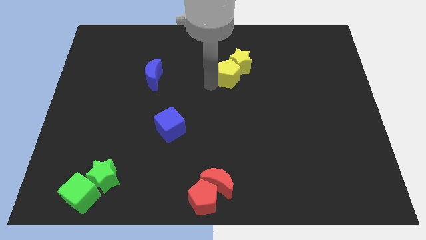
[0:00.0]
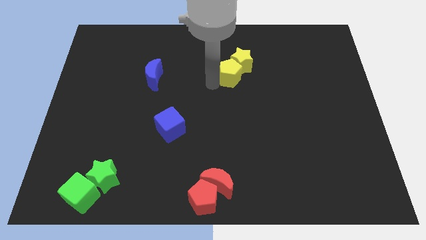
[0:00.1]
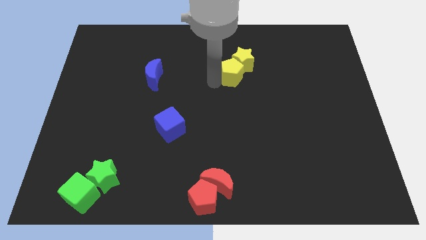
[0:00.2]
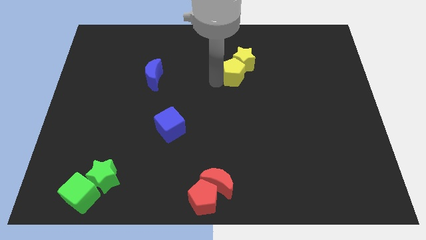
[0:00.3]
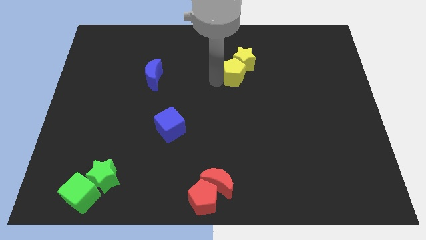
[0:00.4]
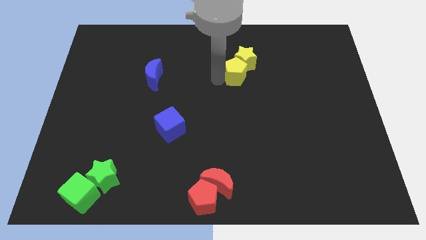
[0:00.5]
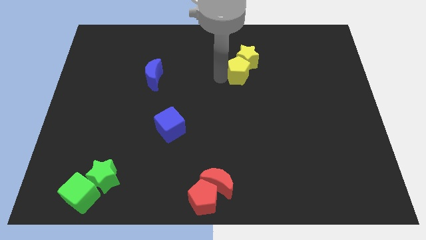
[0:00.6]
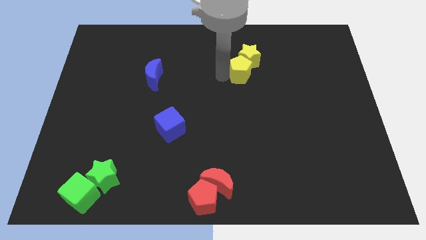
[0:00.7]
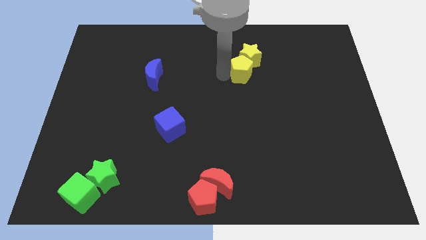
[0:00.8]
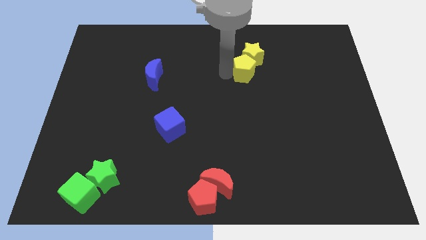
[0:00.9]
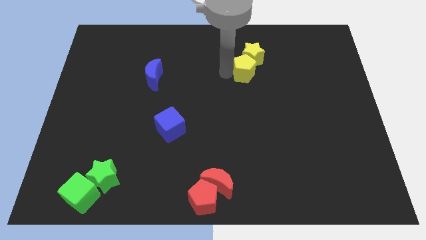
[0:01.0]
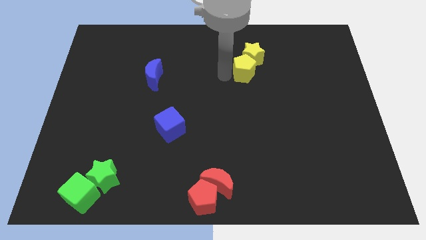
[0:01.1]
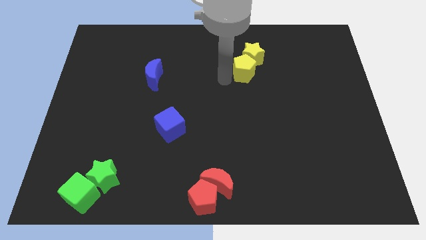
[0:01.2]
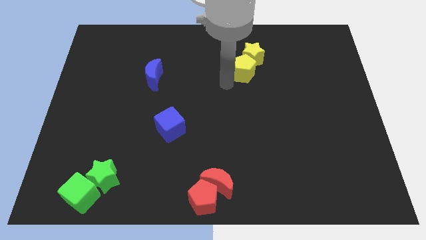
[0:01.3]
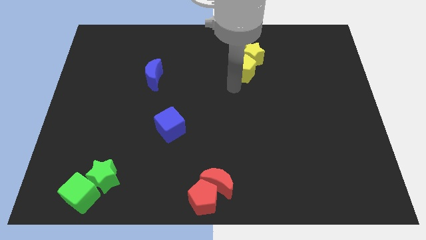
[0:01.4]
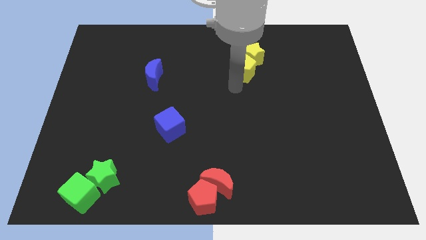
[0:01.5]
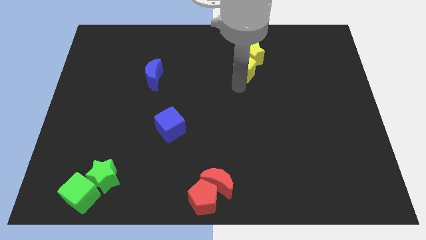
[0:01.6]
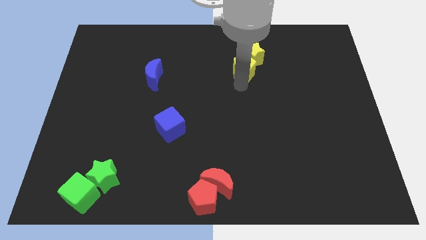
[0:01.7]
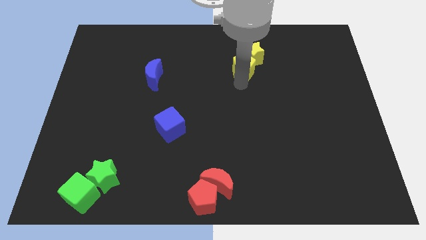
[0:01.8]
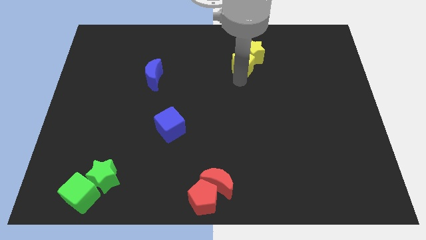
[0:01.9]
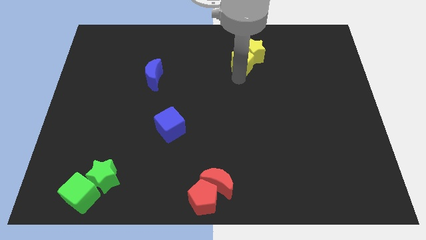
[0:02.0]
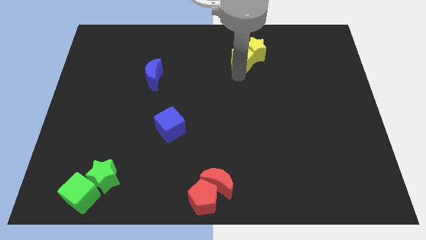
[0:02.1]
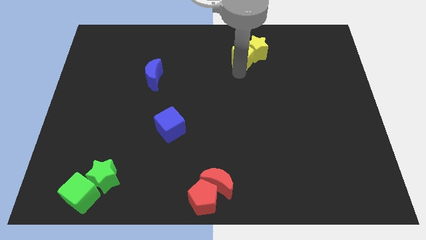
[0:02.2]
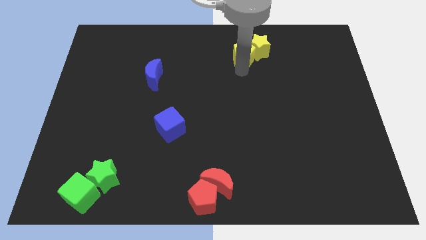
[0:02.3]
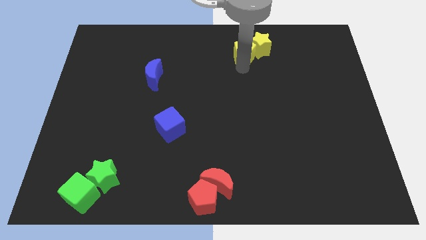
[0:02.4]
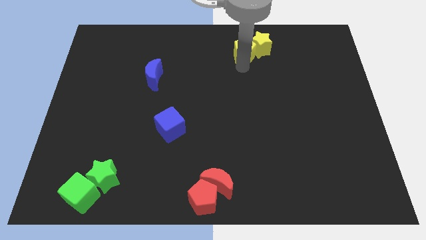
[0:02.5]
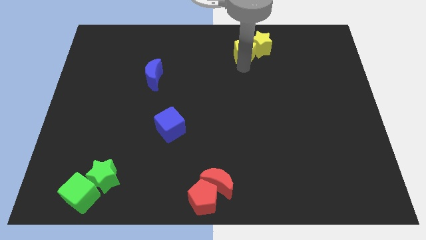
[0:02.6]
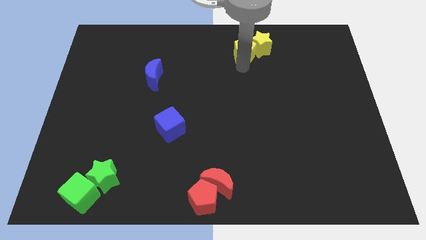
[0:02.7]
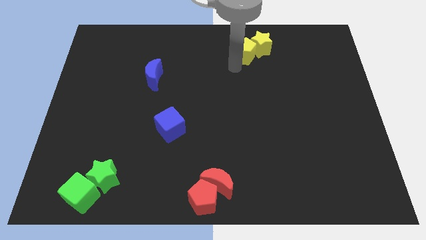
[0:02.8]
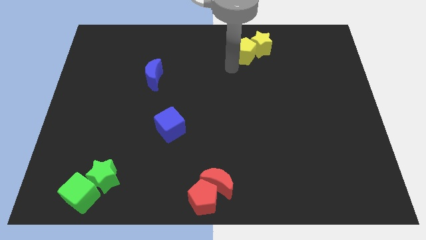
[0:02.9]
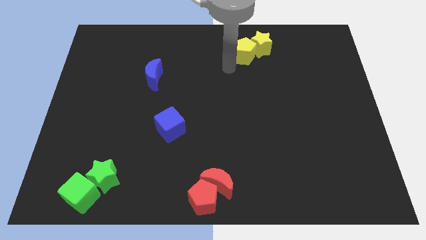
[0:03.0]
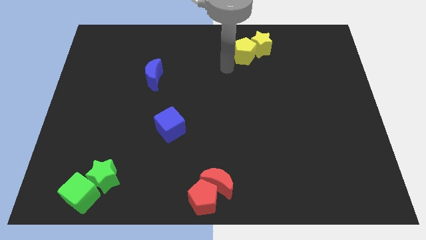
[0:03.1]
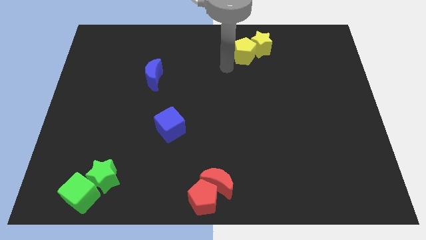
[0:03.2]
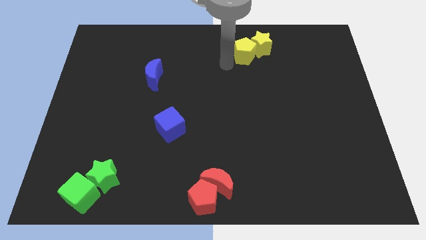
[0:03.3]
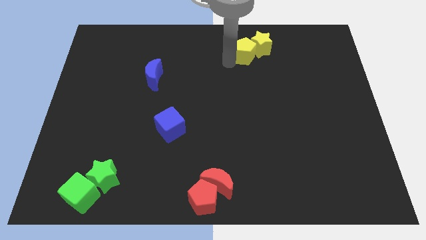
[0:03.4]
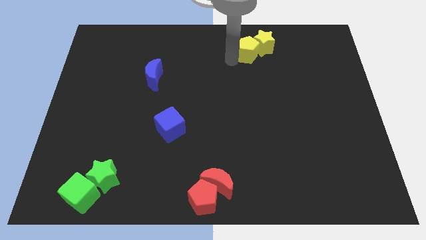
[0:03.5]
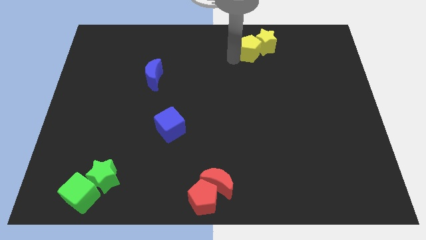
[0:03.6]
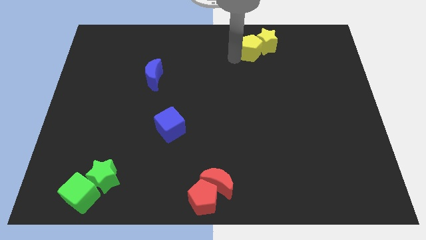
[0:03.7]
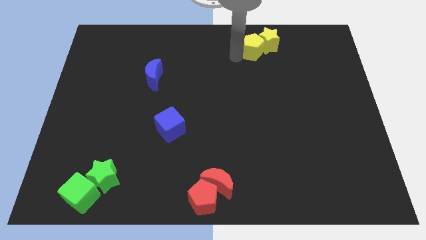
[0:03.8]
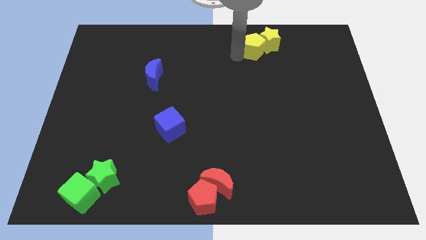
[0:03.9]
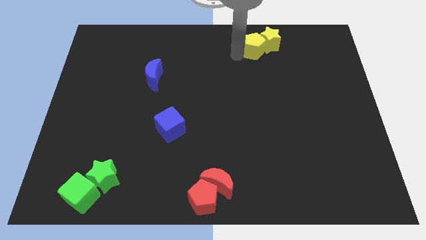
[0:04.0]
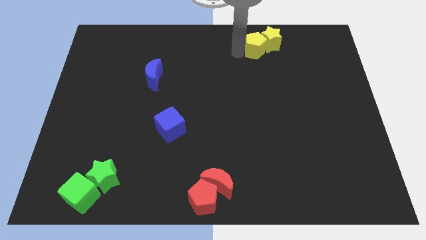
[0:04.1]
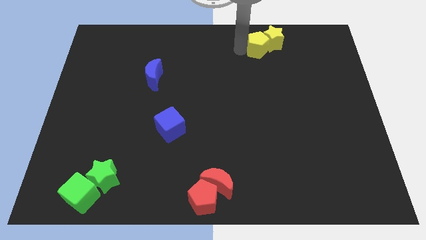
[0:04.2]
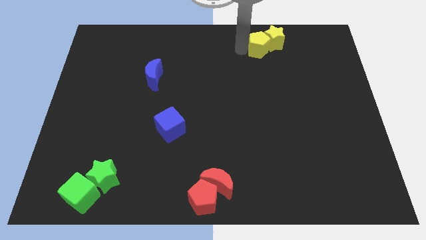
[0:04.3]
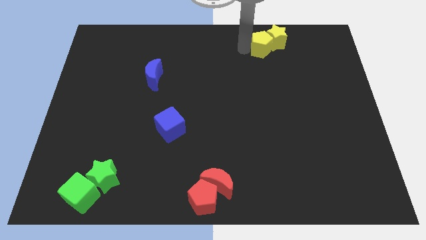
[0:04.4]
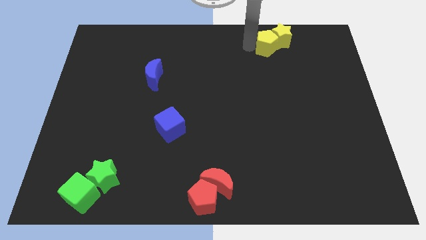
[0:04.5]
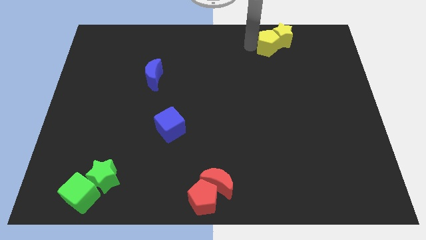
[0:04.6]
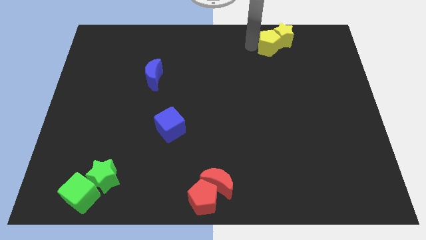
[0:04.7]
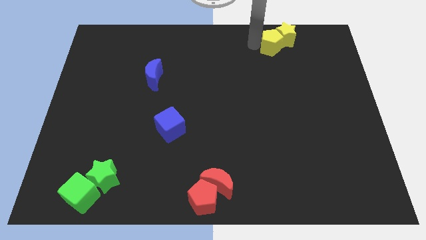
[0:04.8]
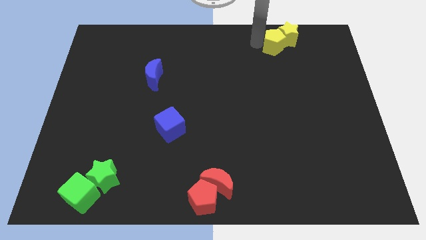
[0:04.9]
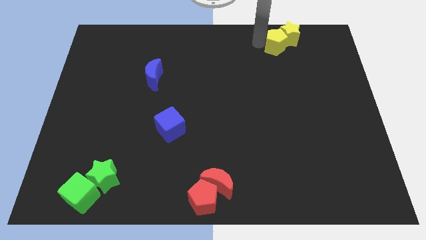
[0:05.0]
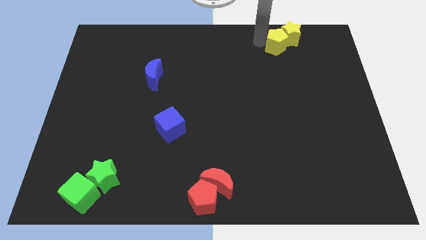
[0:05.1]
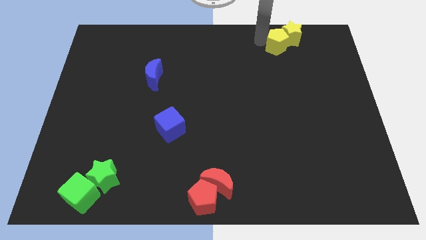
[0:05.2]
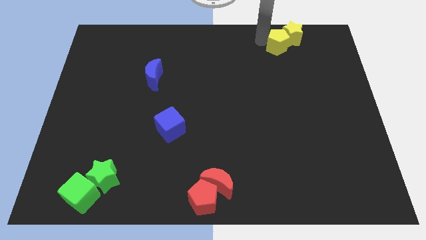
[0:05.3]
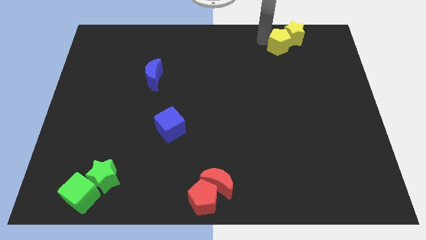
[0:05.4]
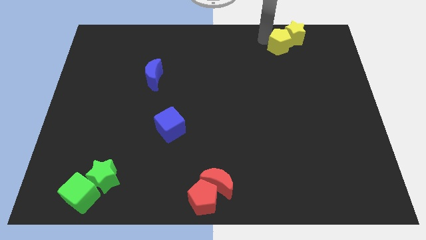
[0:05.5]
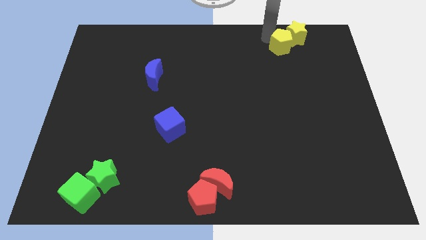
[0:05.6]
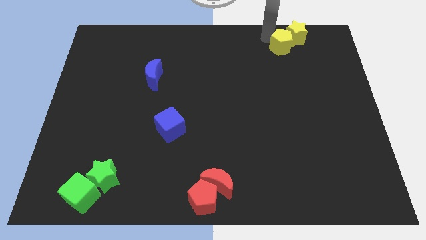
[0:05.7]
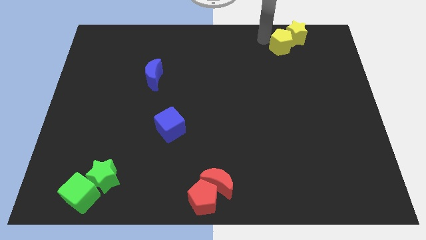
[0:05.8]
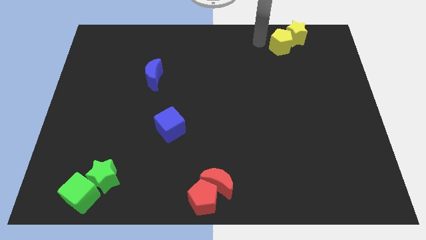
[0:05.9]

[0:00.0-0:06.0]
push the yellow pentagon and yellow star to the top right side of the board

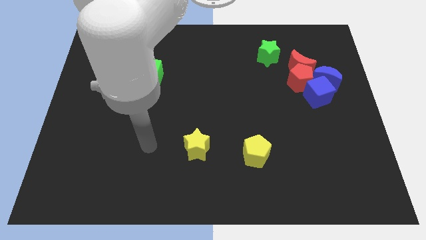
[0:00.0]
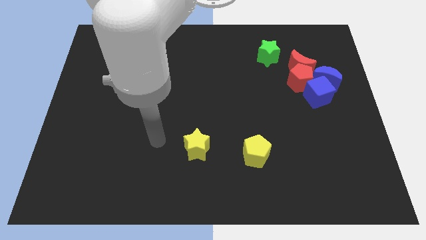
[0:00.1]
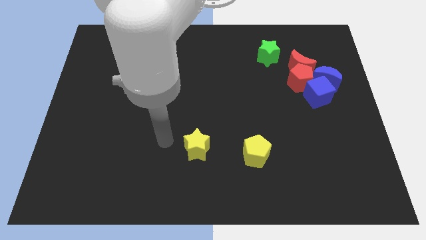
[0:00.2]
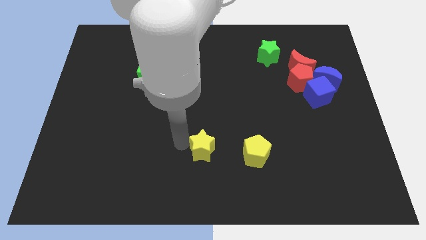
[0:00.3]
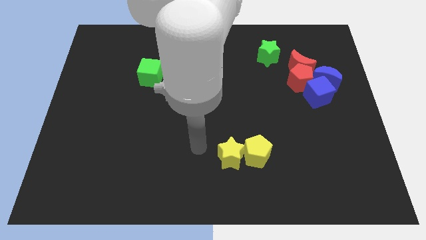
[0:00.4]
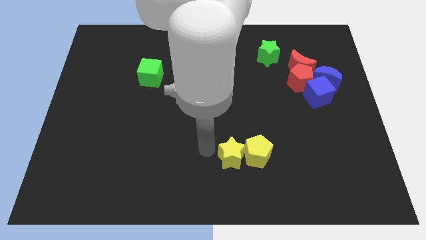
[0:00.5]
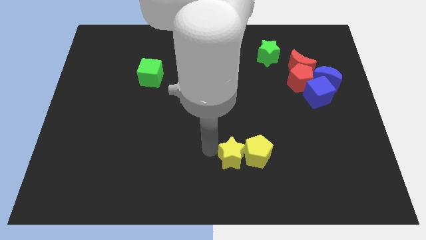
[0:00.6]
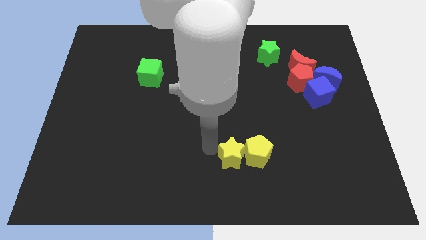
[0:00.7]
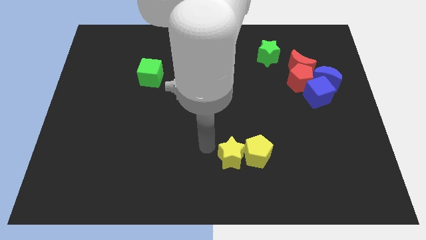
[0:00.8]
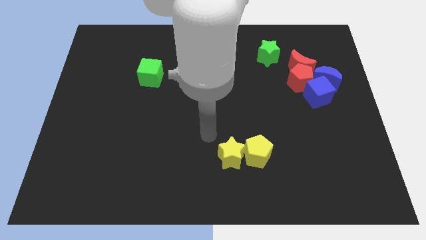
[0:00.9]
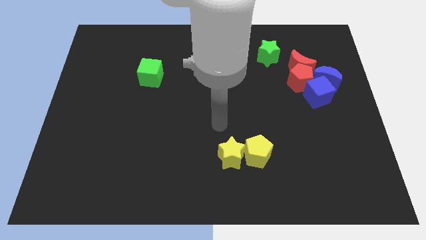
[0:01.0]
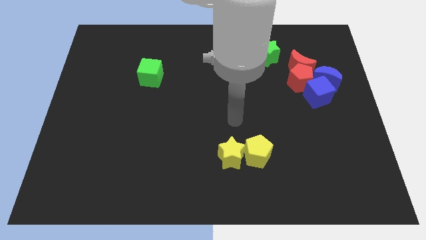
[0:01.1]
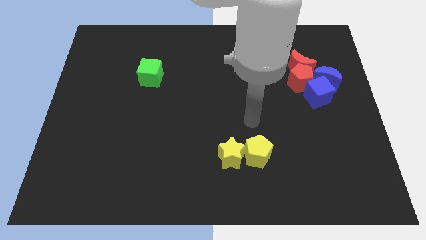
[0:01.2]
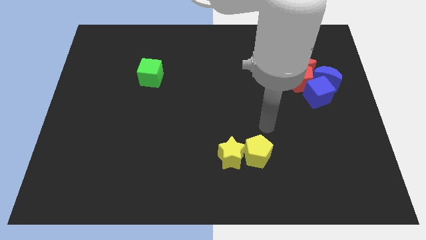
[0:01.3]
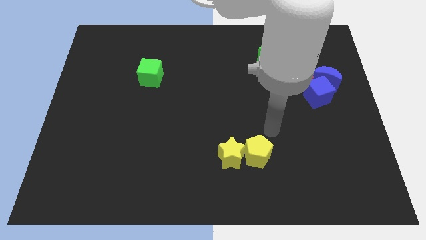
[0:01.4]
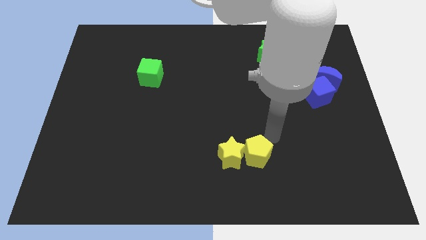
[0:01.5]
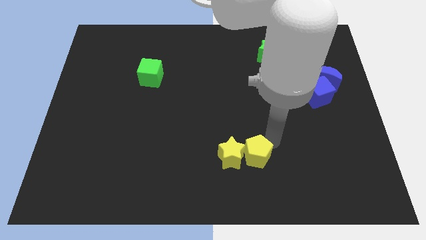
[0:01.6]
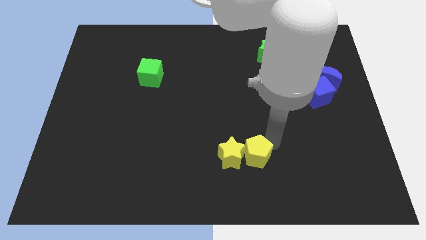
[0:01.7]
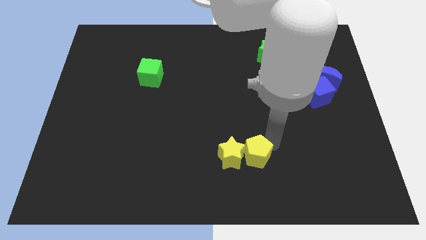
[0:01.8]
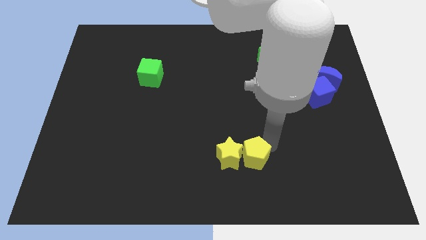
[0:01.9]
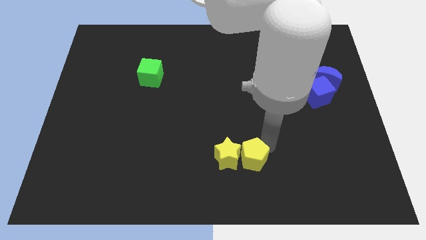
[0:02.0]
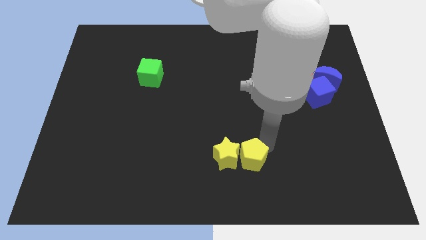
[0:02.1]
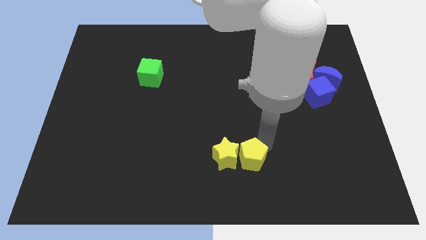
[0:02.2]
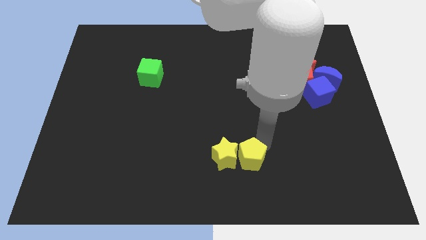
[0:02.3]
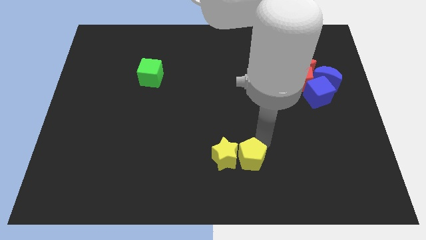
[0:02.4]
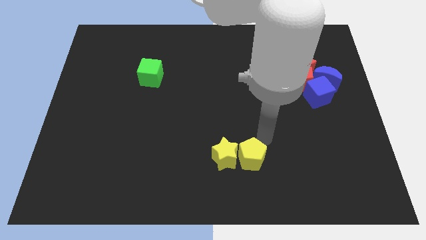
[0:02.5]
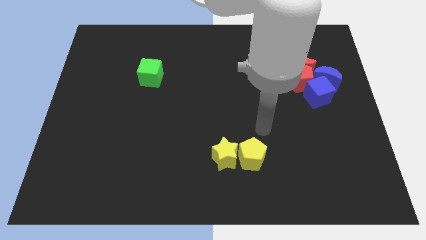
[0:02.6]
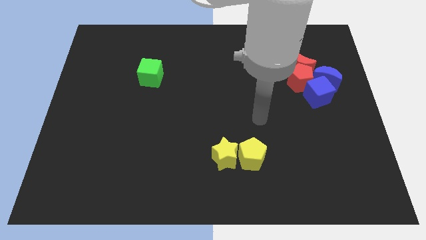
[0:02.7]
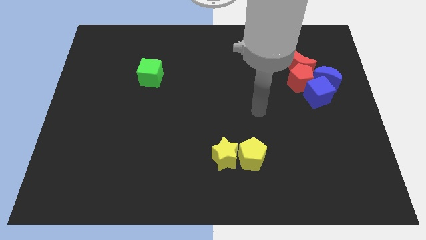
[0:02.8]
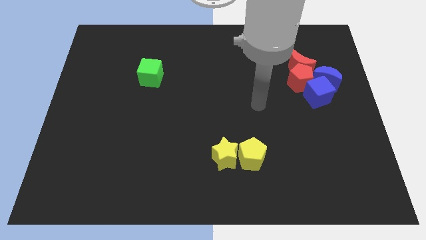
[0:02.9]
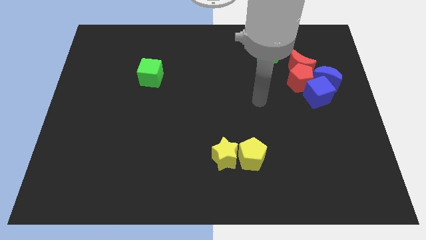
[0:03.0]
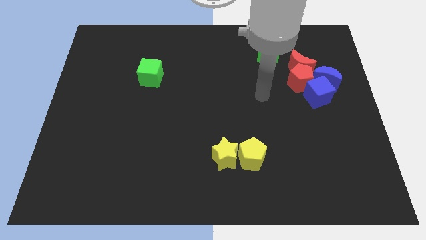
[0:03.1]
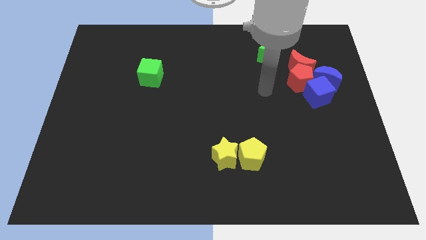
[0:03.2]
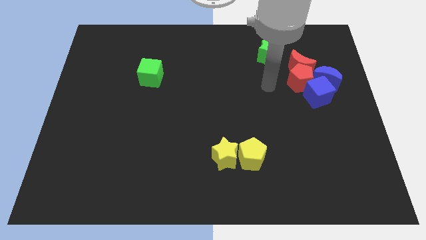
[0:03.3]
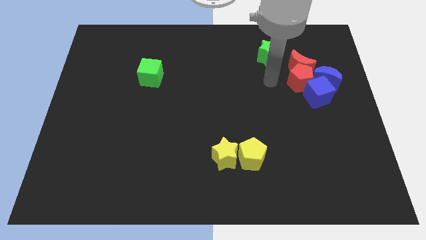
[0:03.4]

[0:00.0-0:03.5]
move yellow star closer to the yellow pentagon
